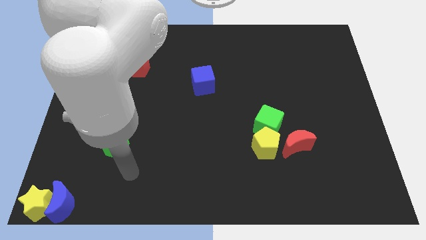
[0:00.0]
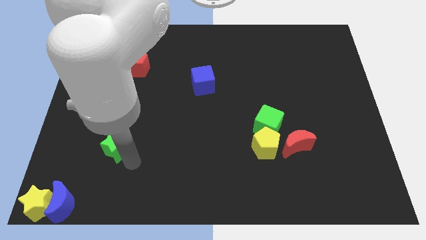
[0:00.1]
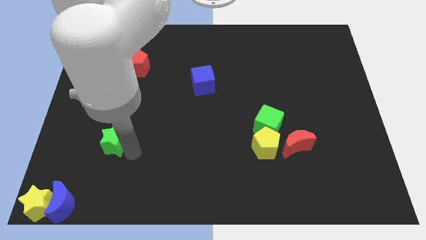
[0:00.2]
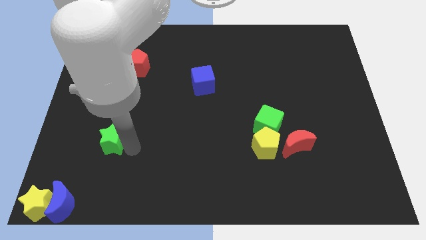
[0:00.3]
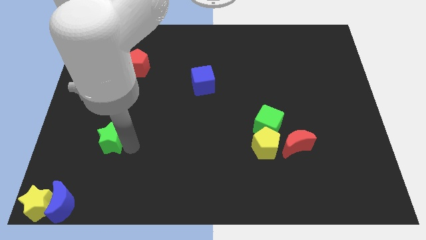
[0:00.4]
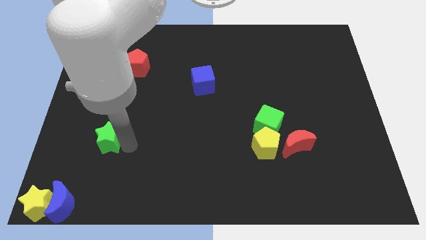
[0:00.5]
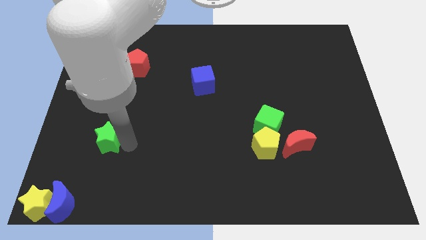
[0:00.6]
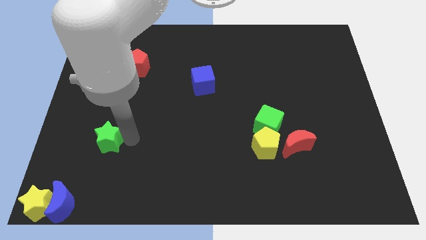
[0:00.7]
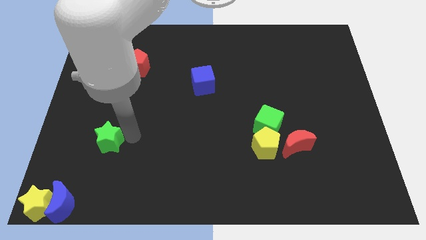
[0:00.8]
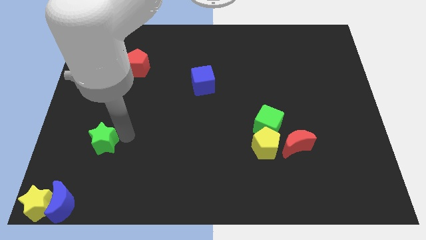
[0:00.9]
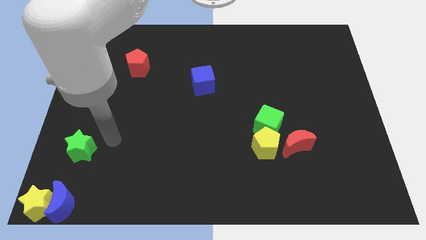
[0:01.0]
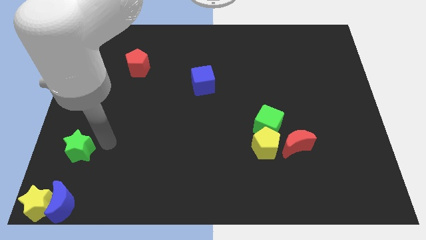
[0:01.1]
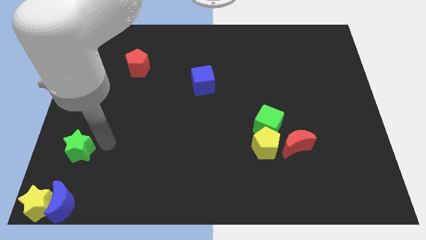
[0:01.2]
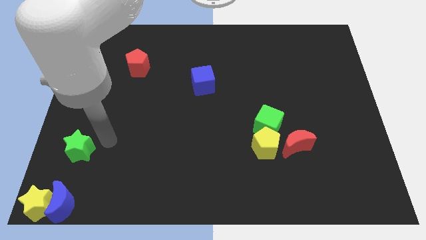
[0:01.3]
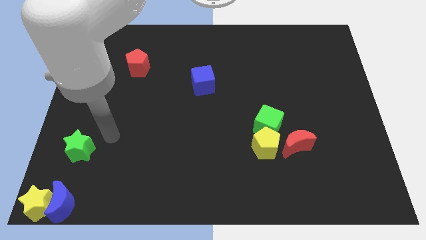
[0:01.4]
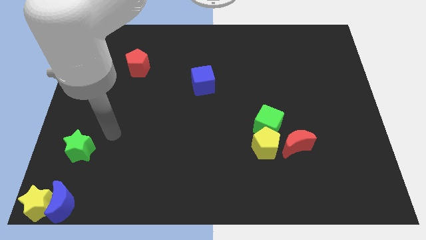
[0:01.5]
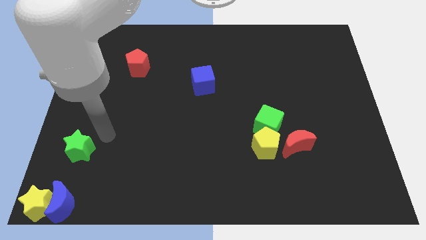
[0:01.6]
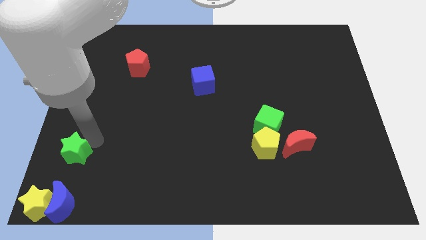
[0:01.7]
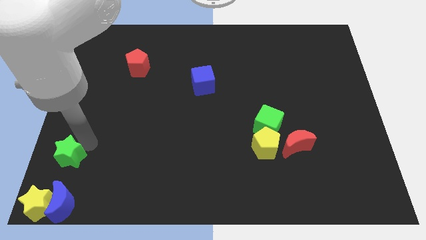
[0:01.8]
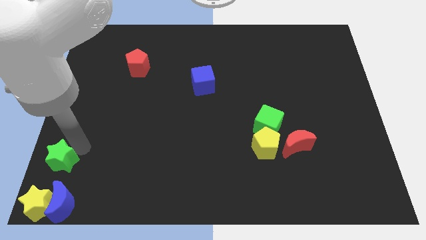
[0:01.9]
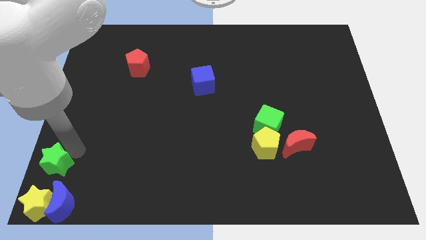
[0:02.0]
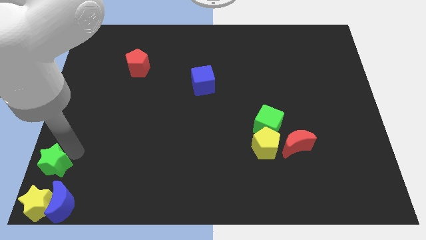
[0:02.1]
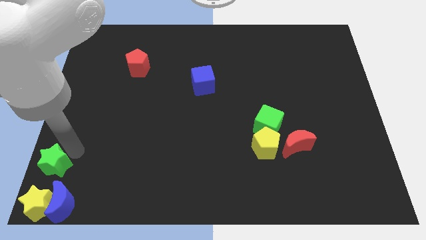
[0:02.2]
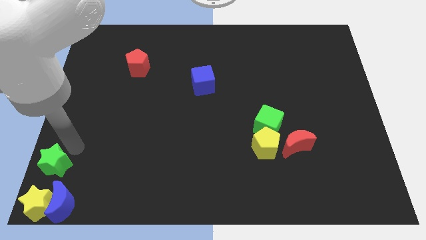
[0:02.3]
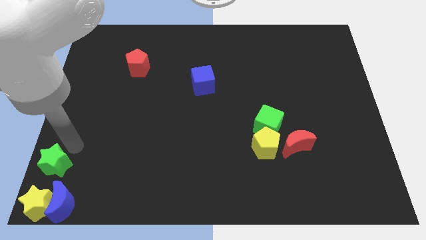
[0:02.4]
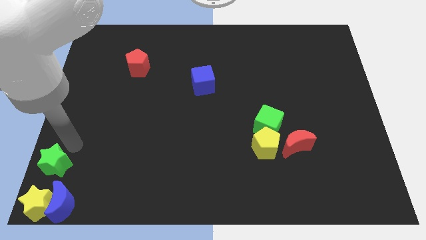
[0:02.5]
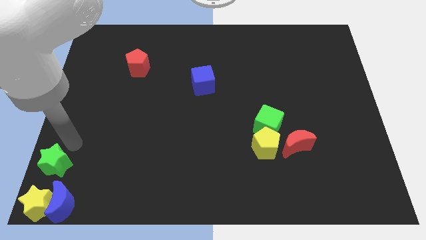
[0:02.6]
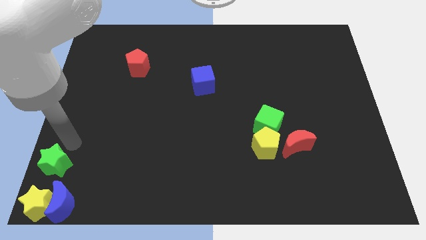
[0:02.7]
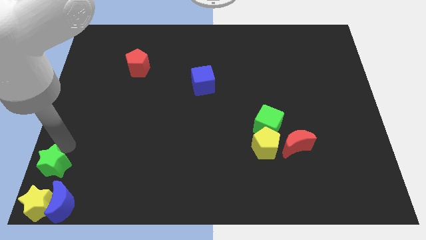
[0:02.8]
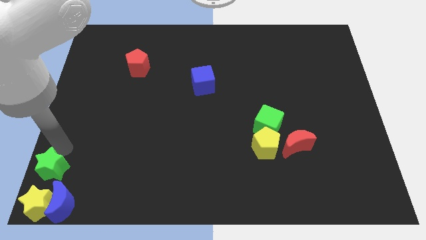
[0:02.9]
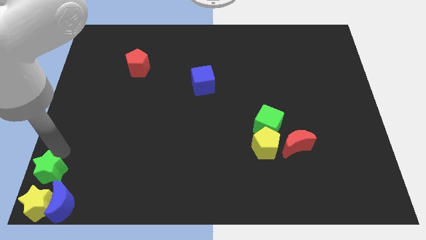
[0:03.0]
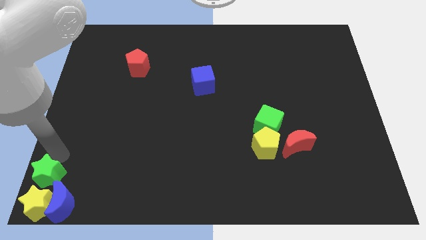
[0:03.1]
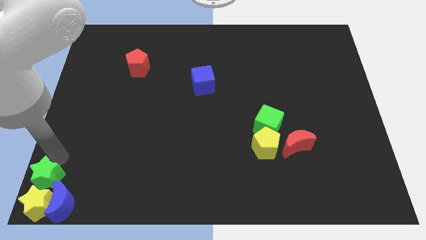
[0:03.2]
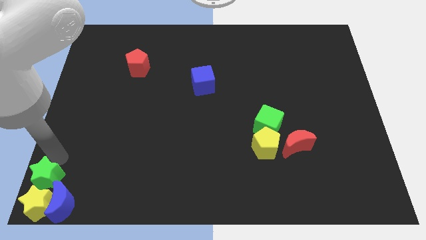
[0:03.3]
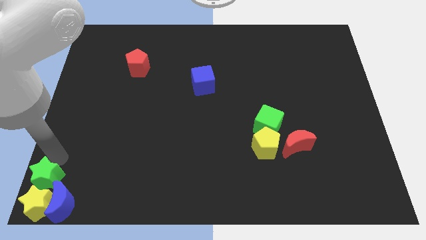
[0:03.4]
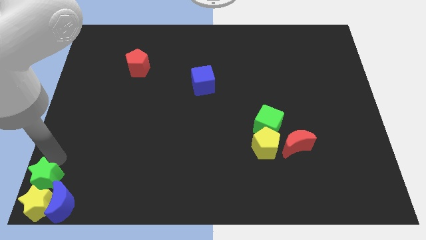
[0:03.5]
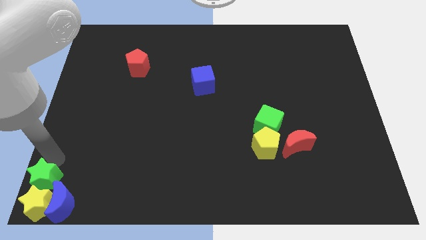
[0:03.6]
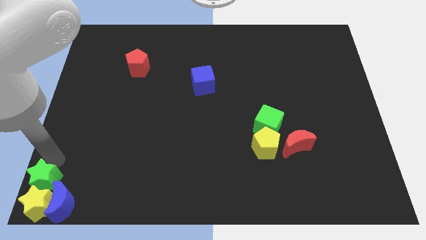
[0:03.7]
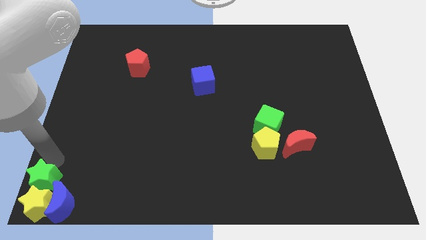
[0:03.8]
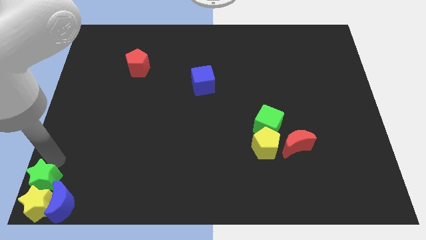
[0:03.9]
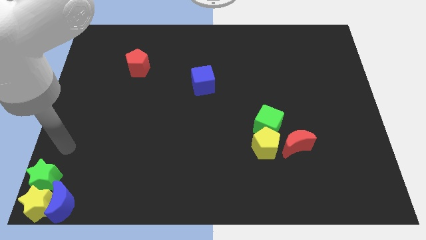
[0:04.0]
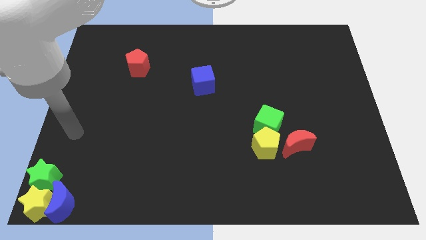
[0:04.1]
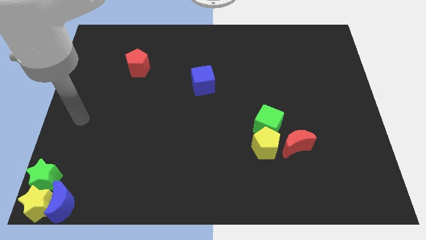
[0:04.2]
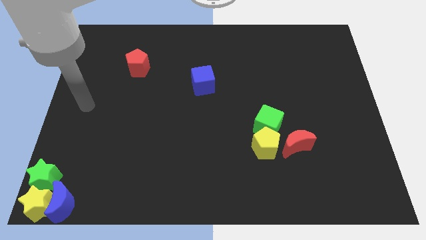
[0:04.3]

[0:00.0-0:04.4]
put the green star at the top side of the yellow star

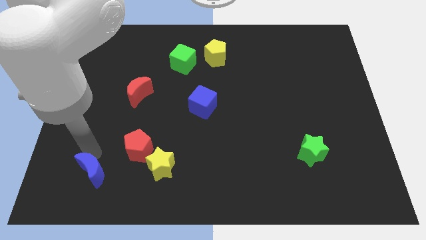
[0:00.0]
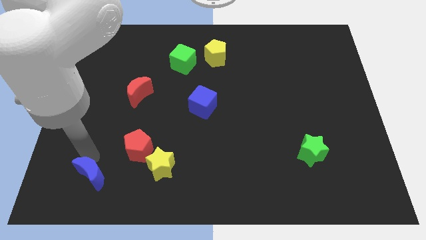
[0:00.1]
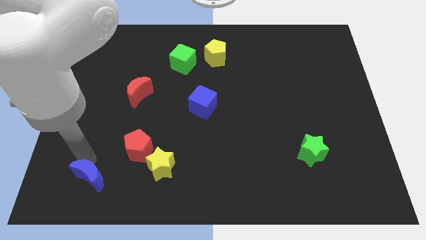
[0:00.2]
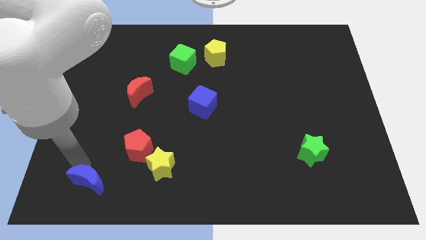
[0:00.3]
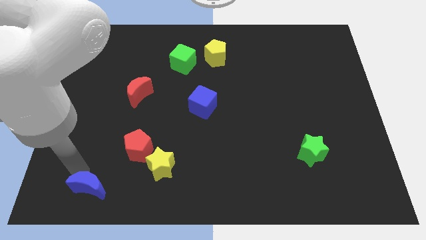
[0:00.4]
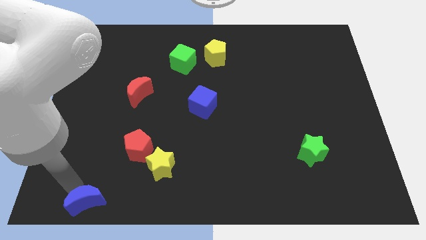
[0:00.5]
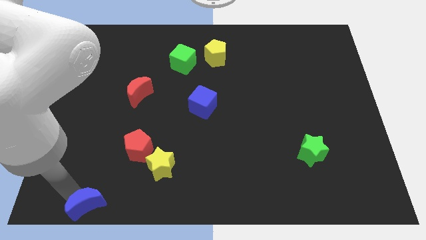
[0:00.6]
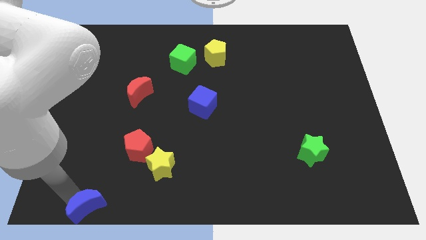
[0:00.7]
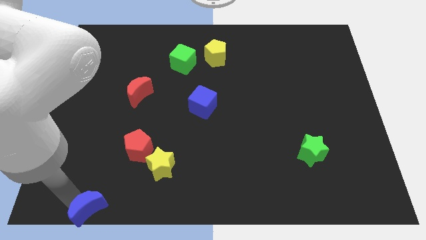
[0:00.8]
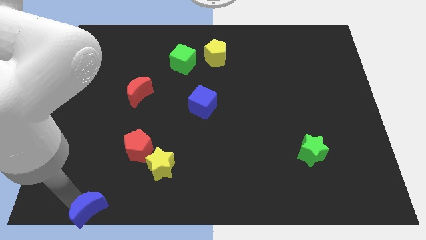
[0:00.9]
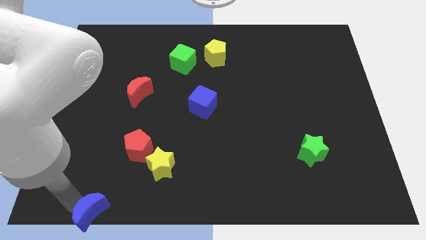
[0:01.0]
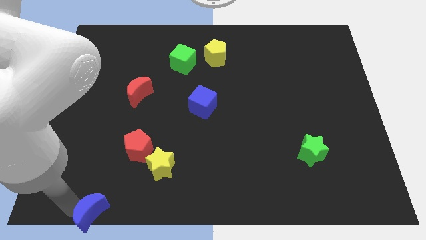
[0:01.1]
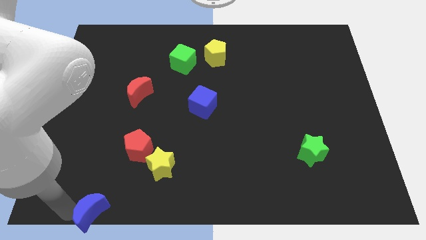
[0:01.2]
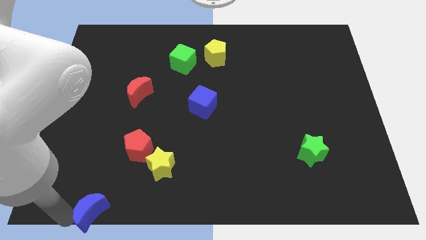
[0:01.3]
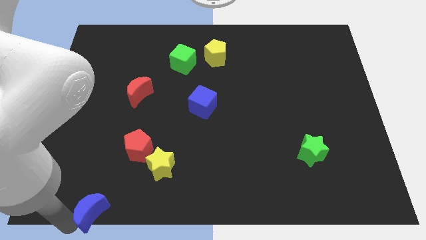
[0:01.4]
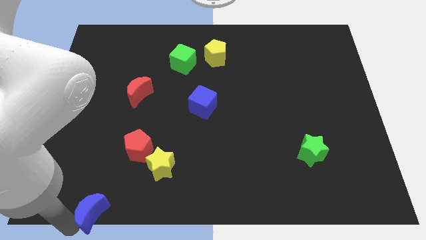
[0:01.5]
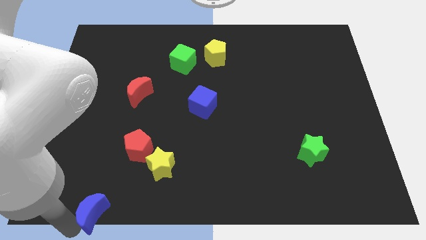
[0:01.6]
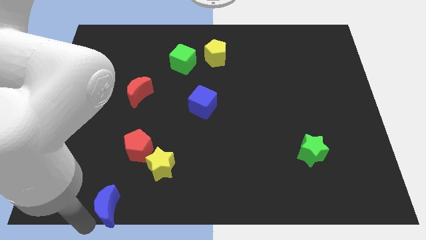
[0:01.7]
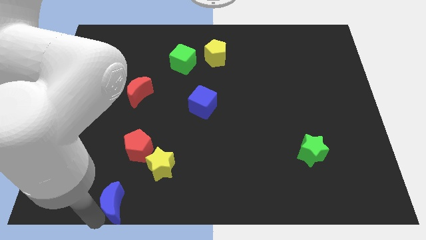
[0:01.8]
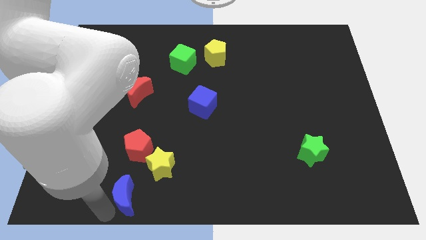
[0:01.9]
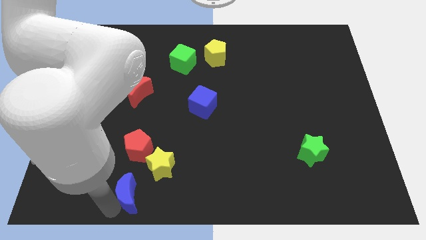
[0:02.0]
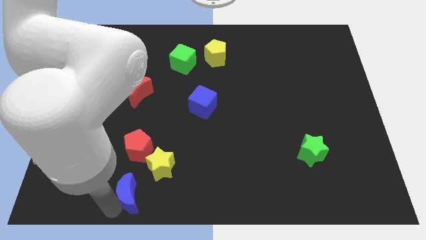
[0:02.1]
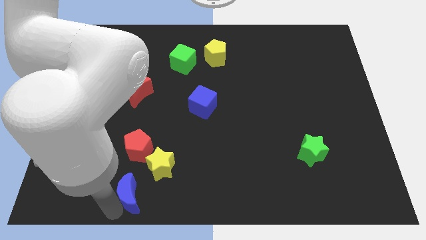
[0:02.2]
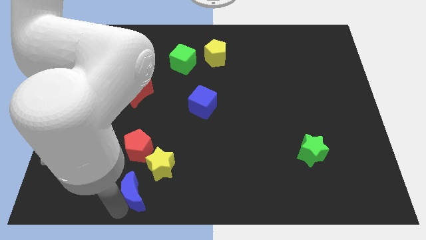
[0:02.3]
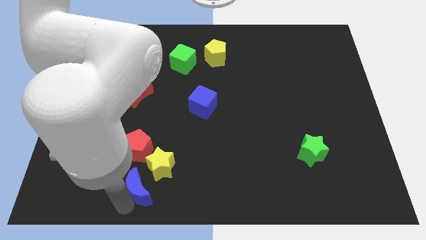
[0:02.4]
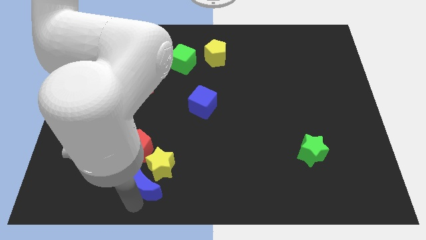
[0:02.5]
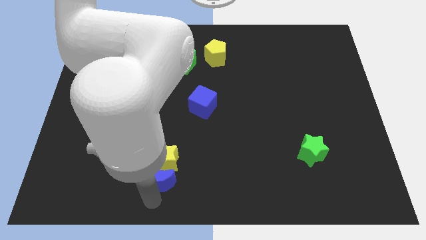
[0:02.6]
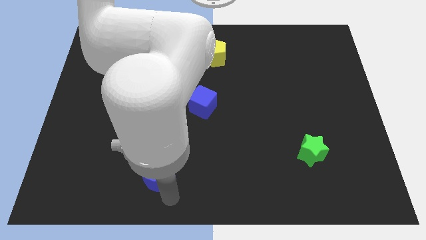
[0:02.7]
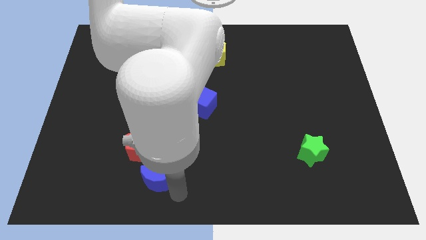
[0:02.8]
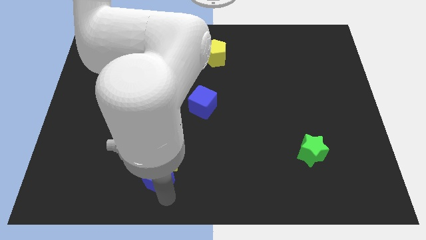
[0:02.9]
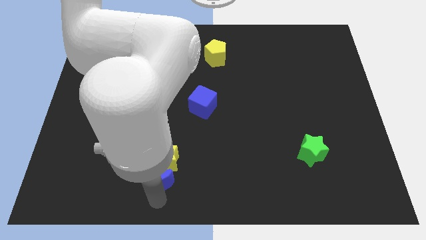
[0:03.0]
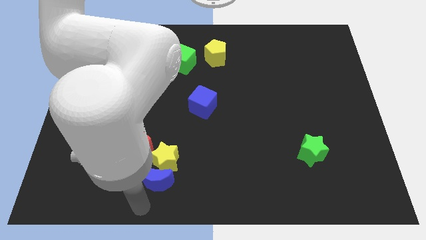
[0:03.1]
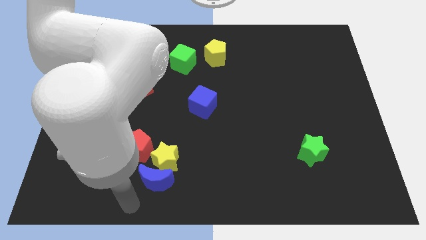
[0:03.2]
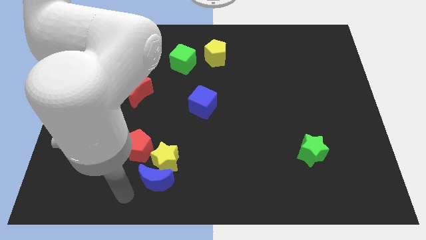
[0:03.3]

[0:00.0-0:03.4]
place the blue crescent below the yellow star

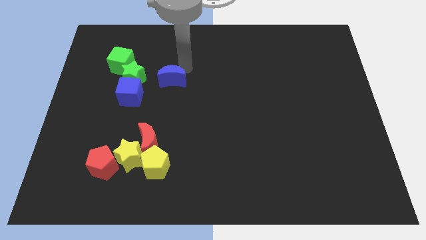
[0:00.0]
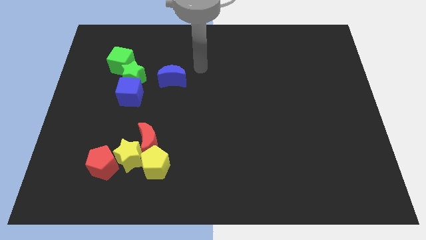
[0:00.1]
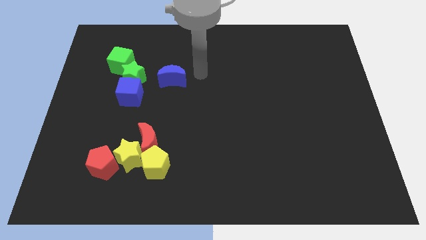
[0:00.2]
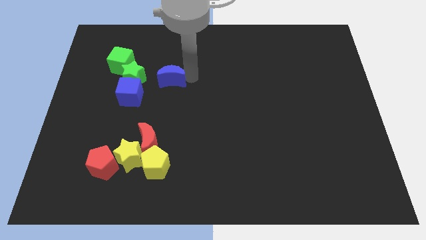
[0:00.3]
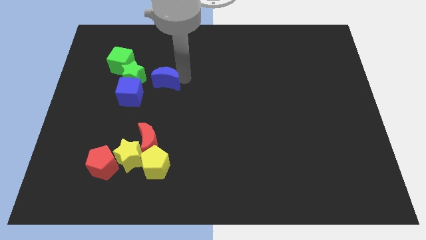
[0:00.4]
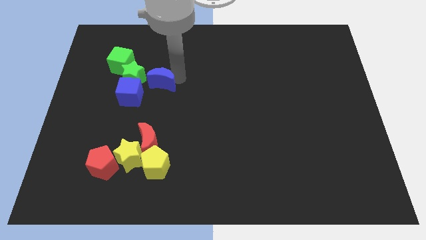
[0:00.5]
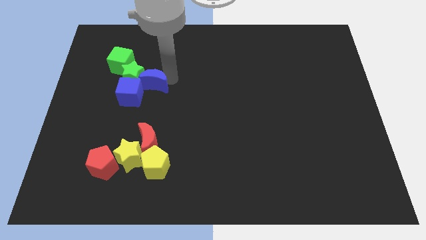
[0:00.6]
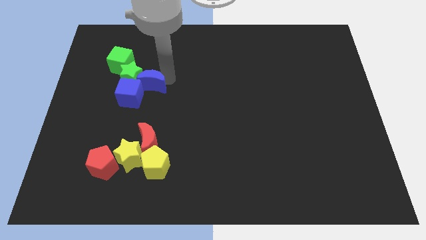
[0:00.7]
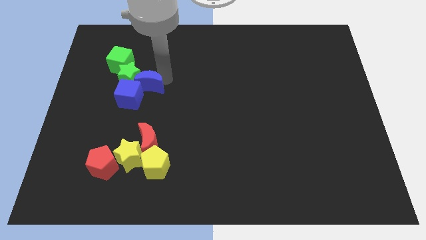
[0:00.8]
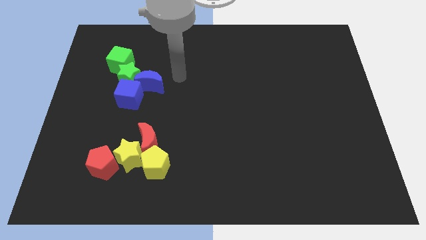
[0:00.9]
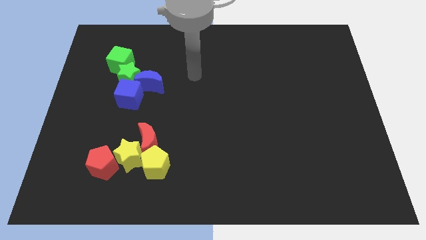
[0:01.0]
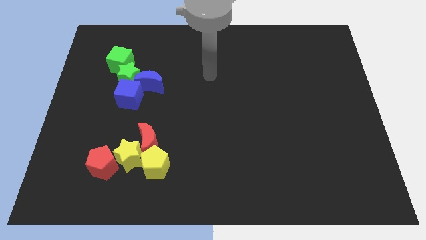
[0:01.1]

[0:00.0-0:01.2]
push the blue crescent into green star

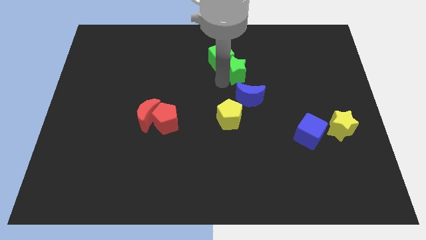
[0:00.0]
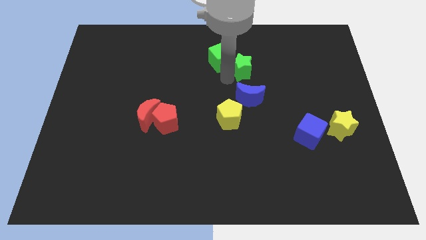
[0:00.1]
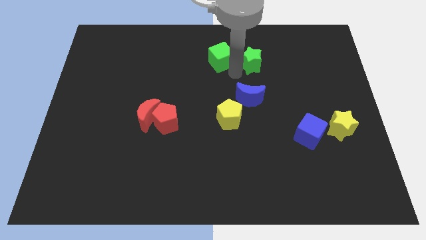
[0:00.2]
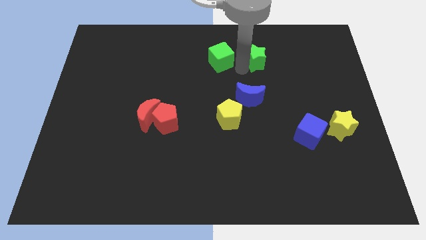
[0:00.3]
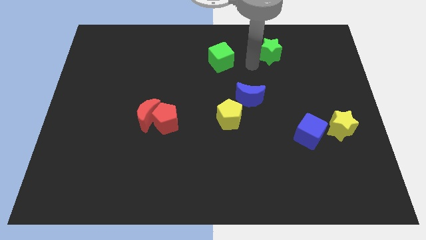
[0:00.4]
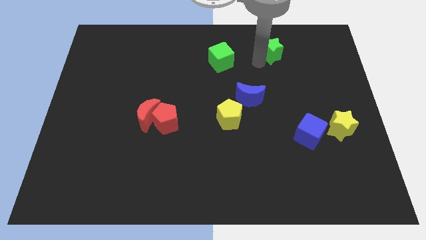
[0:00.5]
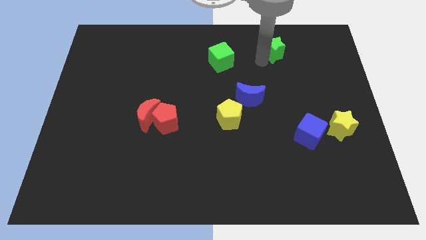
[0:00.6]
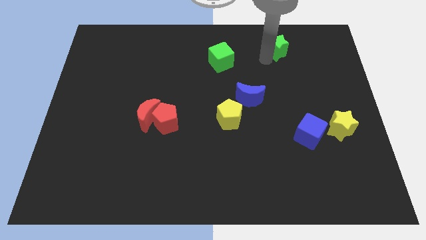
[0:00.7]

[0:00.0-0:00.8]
separate green star from the green cube
